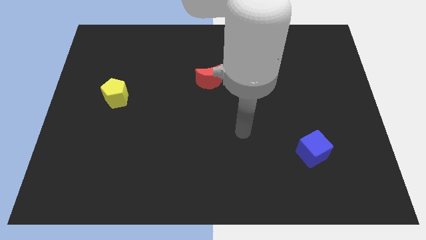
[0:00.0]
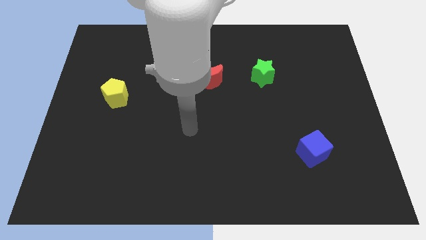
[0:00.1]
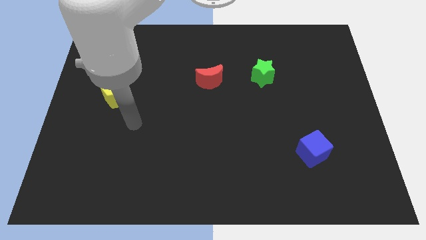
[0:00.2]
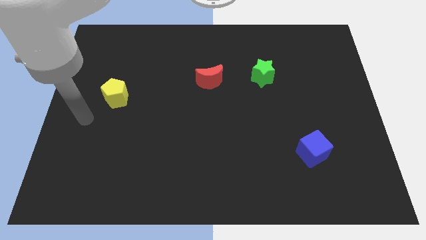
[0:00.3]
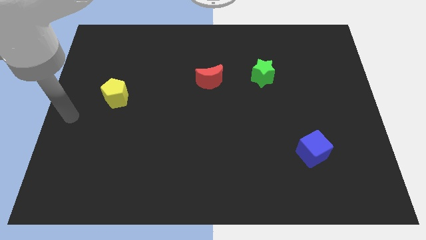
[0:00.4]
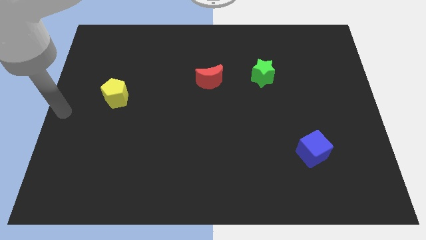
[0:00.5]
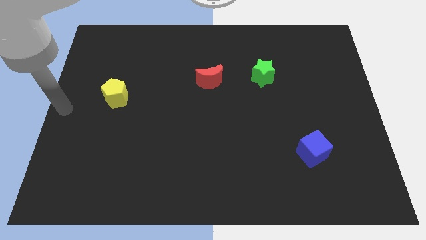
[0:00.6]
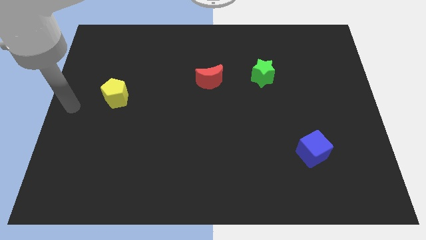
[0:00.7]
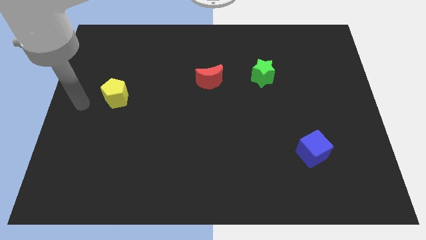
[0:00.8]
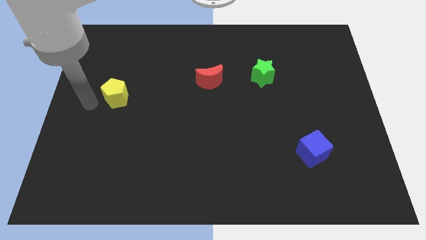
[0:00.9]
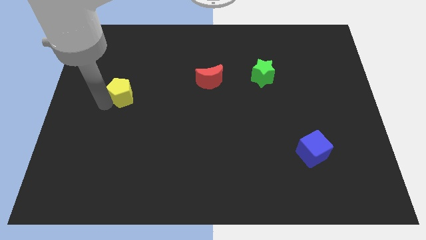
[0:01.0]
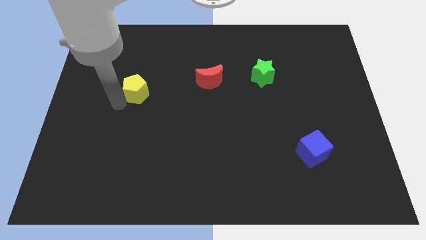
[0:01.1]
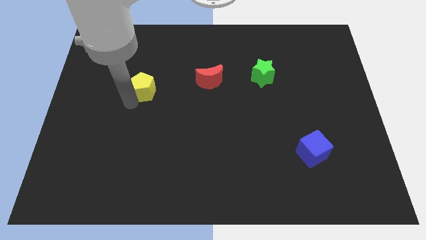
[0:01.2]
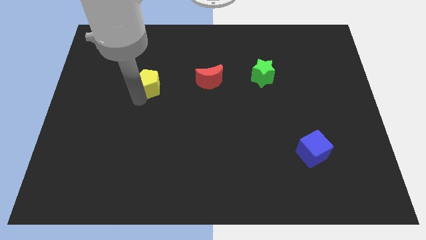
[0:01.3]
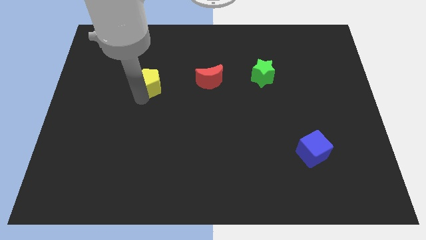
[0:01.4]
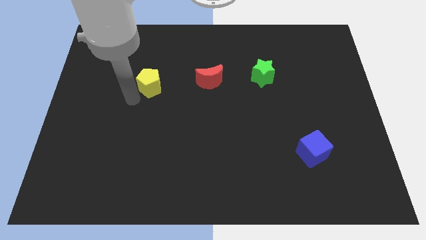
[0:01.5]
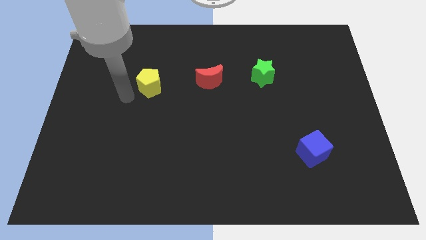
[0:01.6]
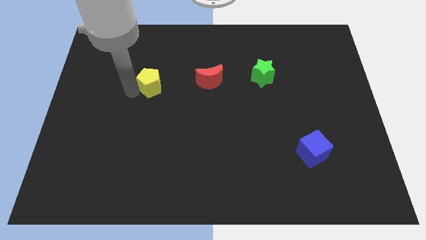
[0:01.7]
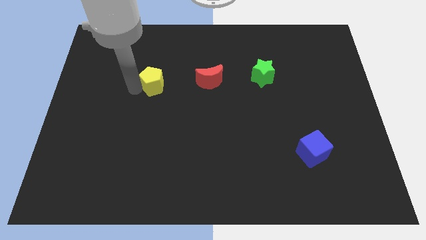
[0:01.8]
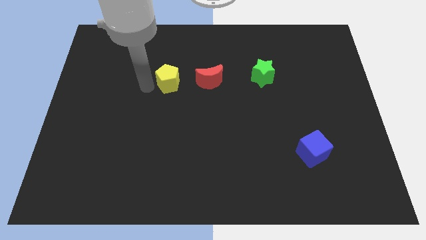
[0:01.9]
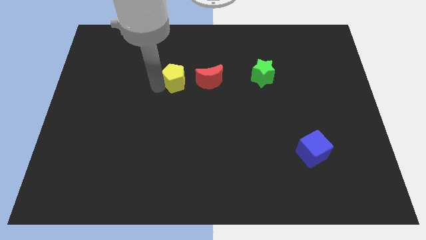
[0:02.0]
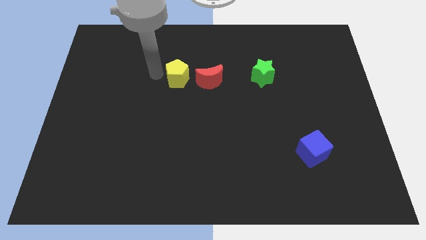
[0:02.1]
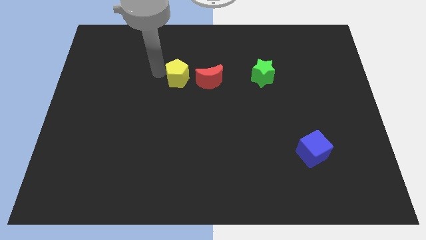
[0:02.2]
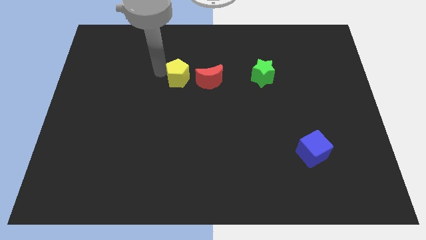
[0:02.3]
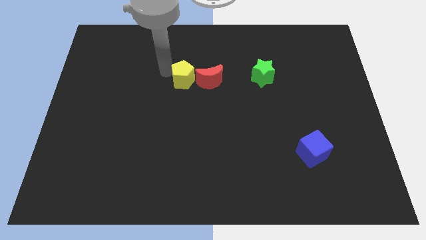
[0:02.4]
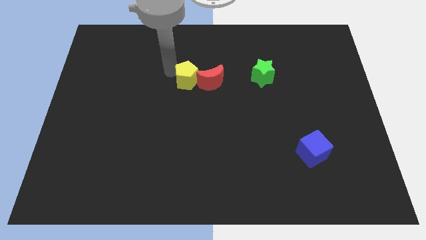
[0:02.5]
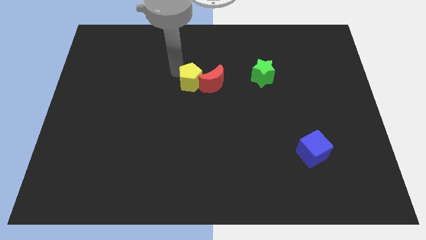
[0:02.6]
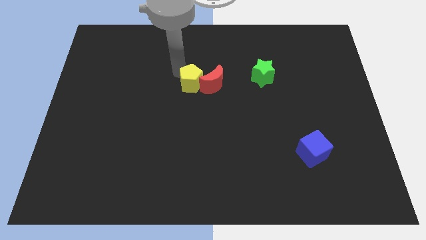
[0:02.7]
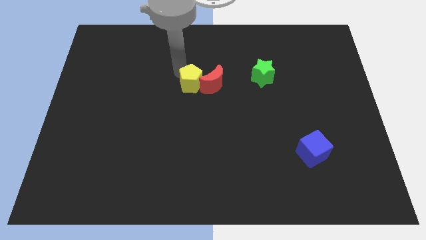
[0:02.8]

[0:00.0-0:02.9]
slide the yellow block towards the moon

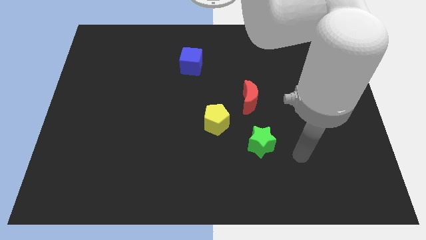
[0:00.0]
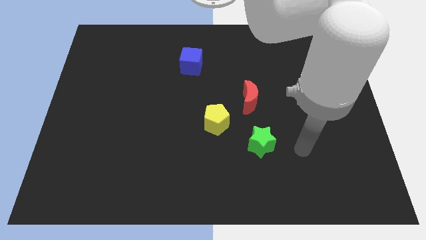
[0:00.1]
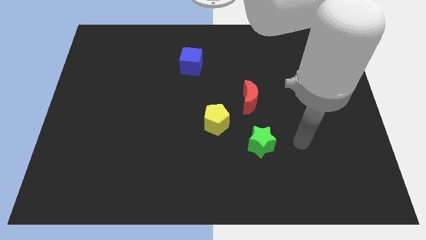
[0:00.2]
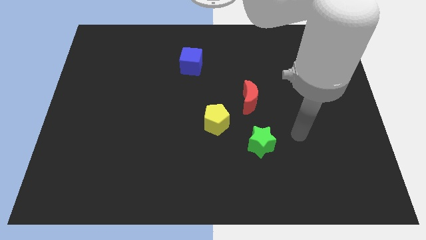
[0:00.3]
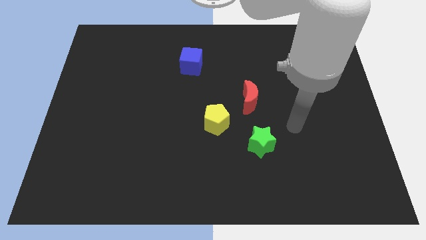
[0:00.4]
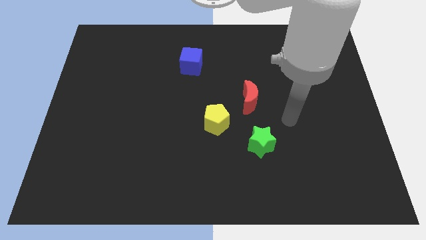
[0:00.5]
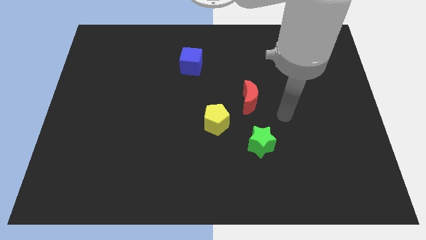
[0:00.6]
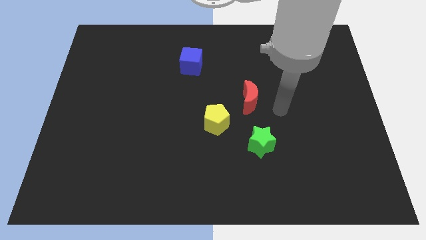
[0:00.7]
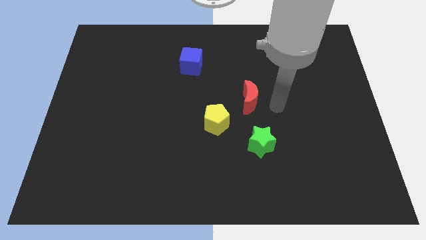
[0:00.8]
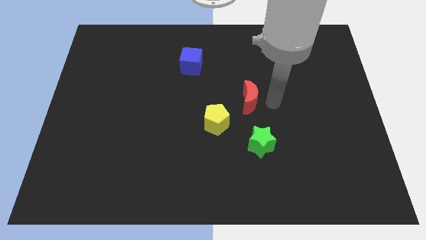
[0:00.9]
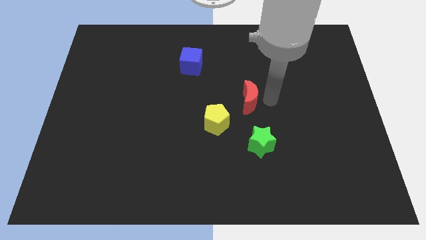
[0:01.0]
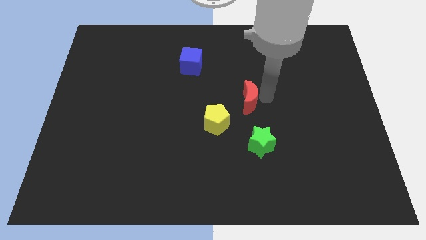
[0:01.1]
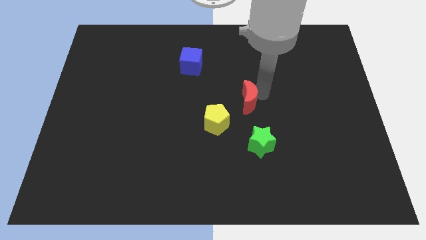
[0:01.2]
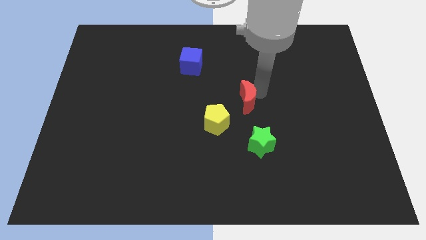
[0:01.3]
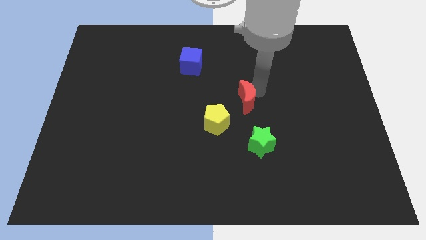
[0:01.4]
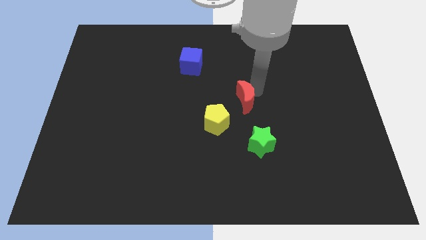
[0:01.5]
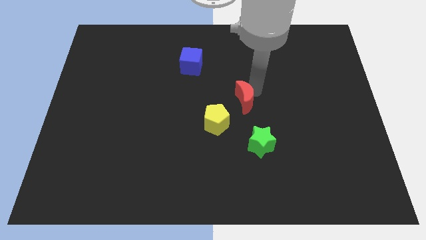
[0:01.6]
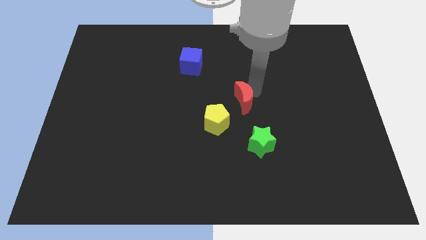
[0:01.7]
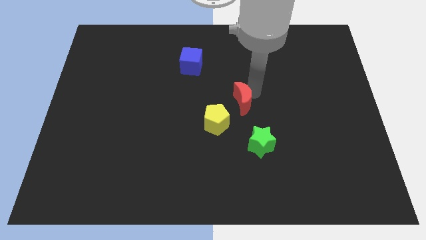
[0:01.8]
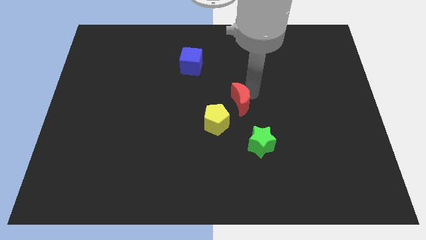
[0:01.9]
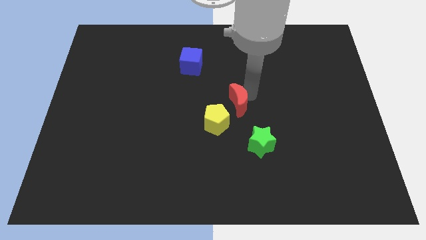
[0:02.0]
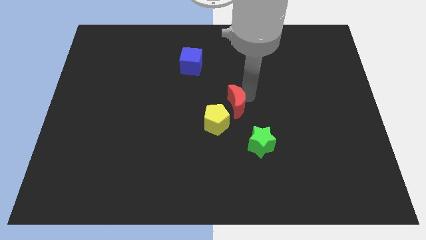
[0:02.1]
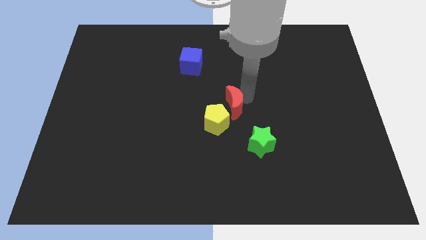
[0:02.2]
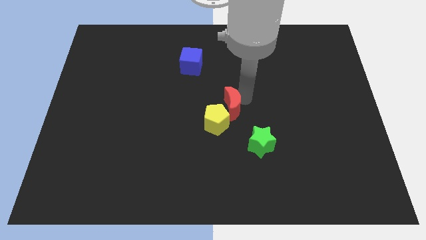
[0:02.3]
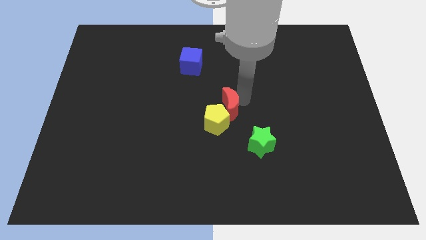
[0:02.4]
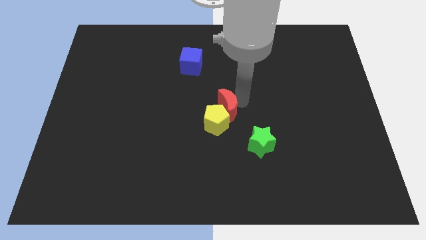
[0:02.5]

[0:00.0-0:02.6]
put the red block to the pentagon

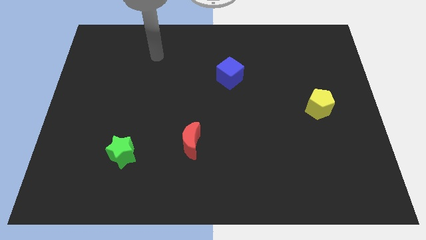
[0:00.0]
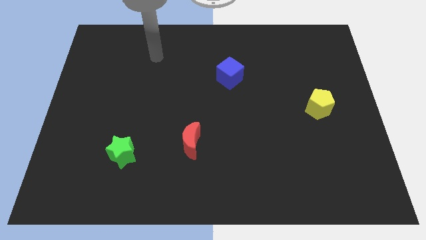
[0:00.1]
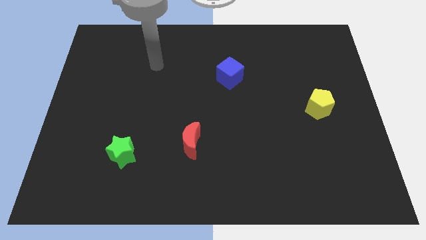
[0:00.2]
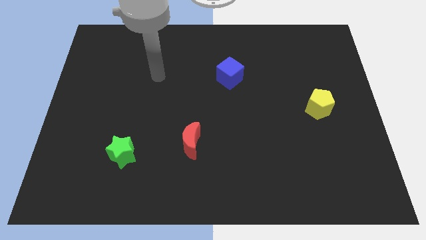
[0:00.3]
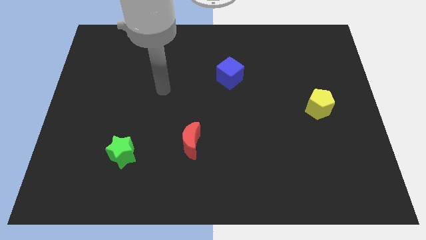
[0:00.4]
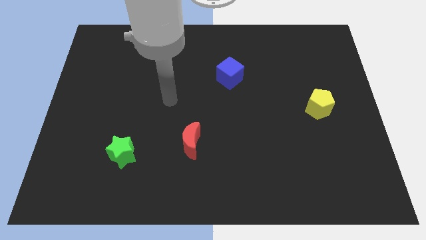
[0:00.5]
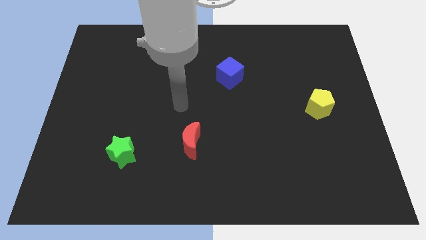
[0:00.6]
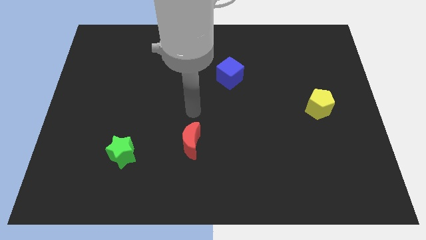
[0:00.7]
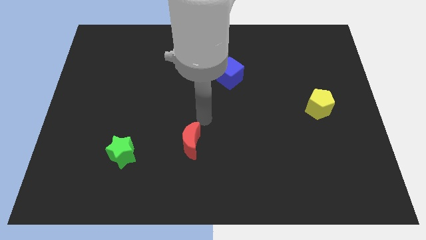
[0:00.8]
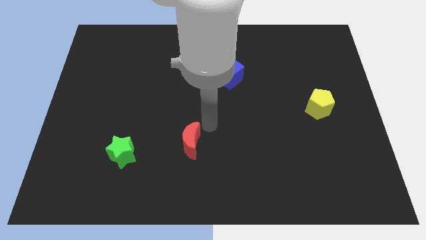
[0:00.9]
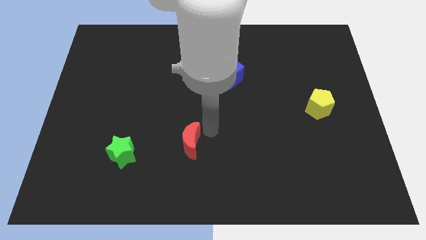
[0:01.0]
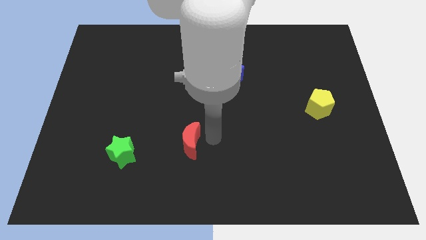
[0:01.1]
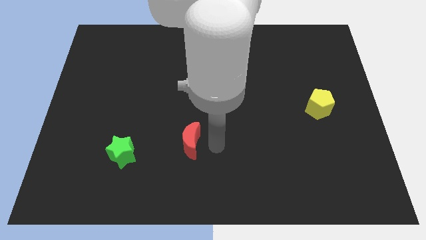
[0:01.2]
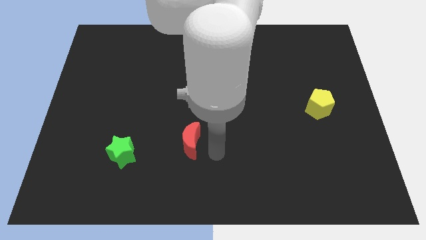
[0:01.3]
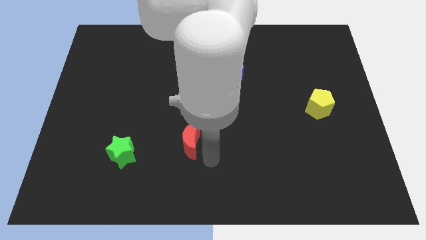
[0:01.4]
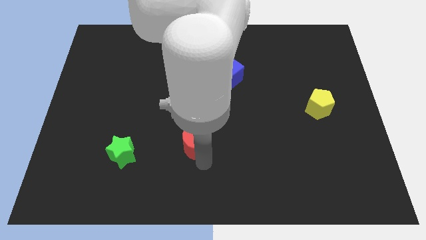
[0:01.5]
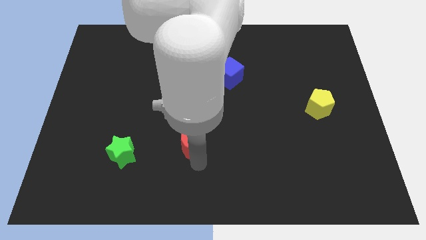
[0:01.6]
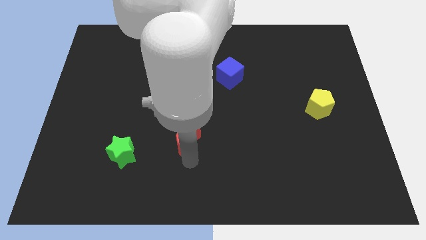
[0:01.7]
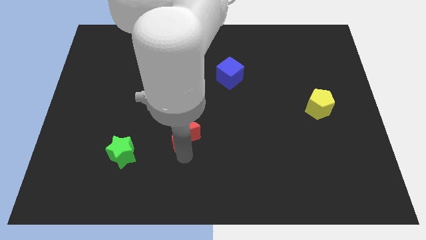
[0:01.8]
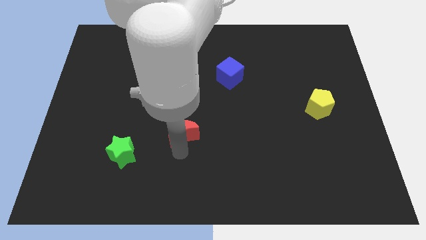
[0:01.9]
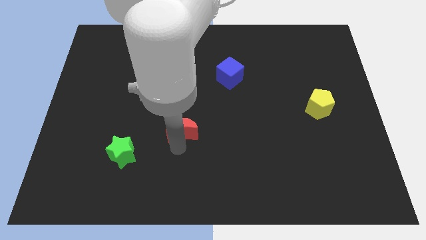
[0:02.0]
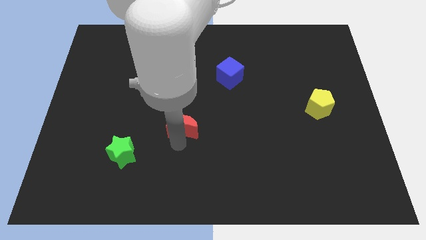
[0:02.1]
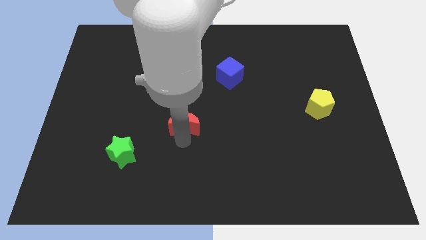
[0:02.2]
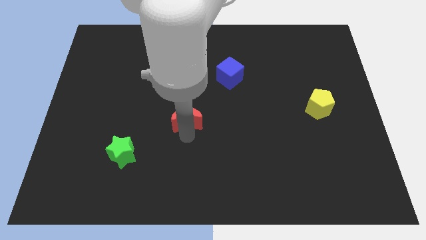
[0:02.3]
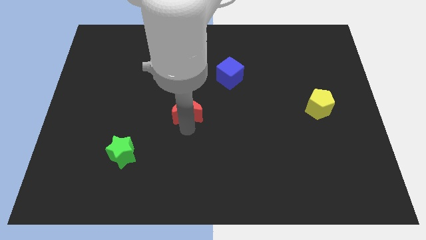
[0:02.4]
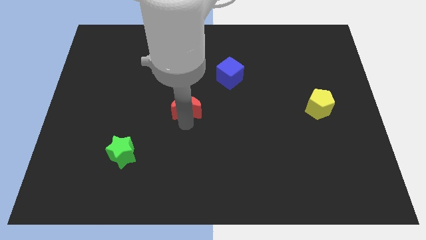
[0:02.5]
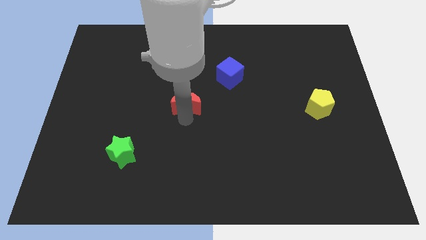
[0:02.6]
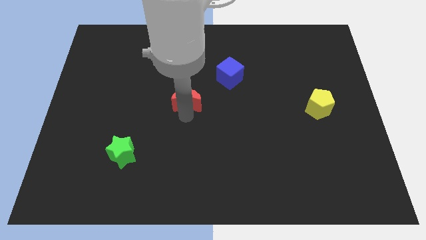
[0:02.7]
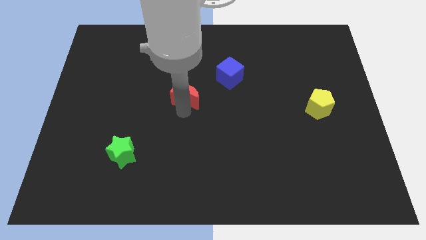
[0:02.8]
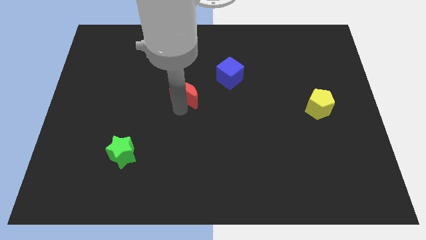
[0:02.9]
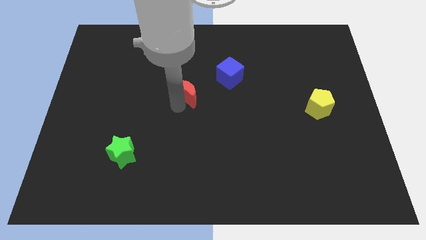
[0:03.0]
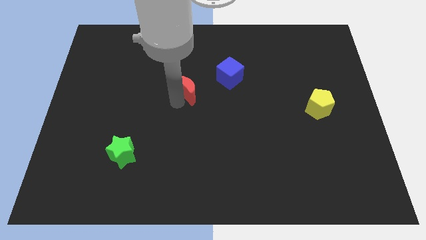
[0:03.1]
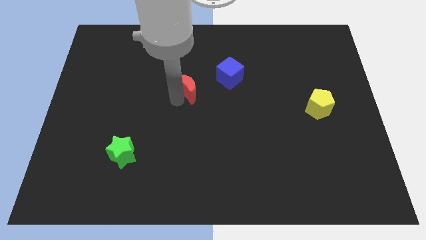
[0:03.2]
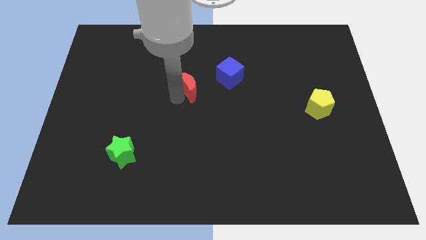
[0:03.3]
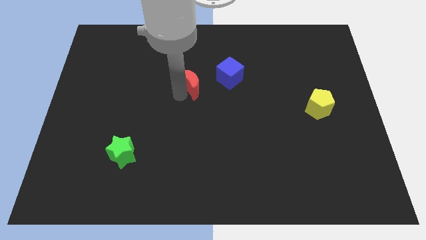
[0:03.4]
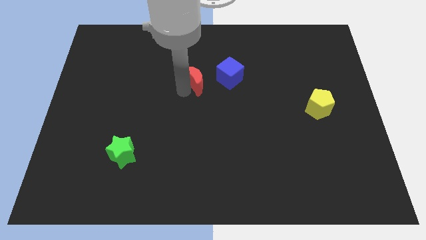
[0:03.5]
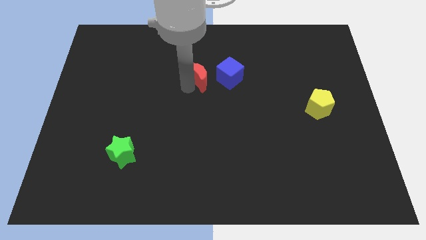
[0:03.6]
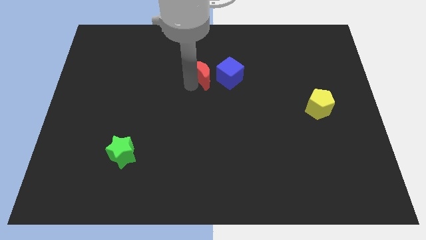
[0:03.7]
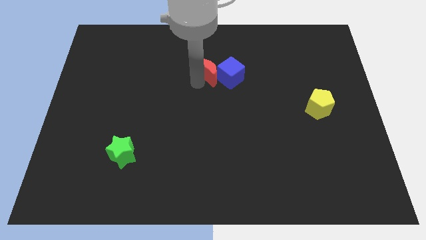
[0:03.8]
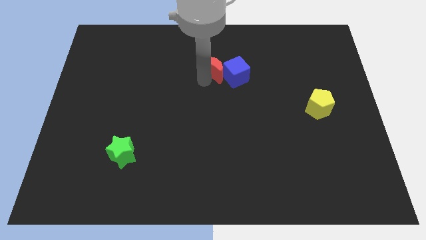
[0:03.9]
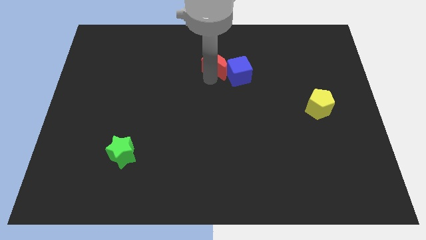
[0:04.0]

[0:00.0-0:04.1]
move the red moon close to the cube
